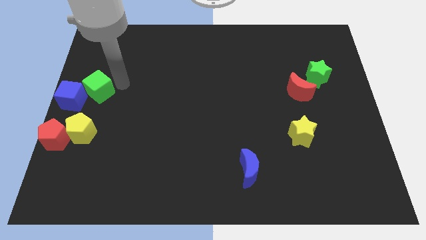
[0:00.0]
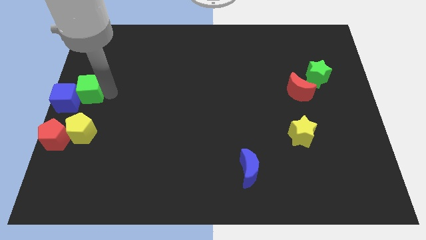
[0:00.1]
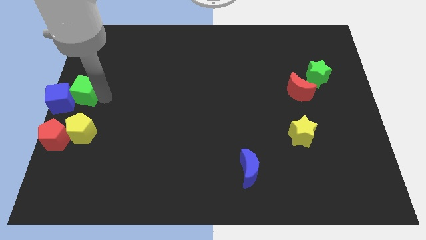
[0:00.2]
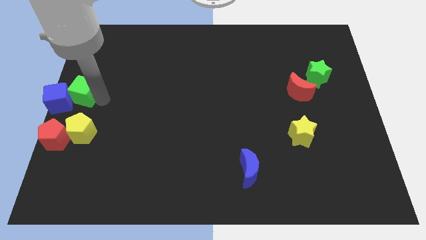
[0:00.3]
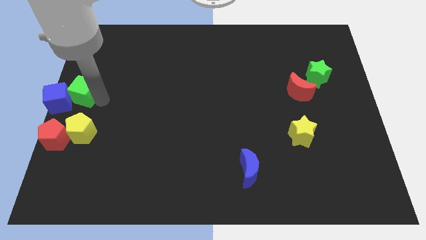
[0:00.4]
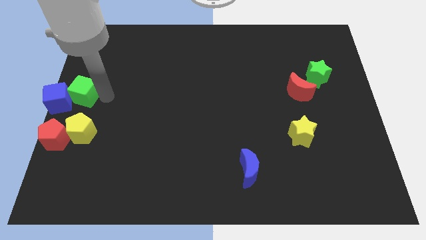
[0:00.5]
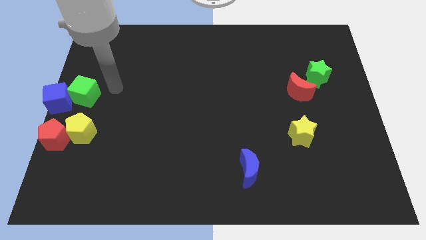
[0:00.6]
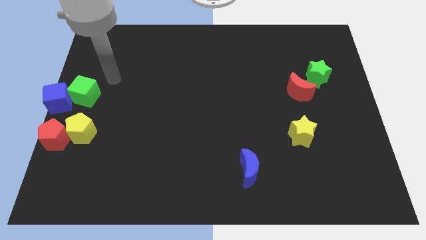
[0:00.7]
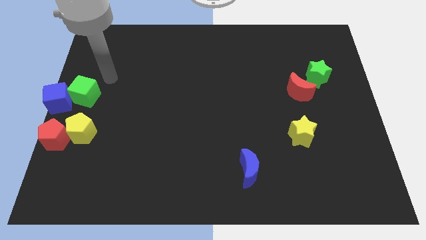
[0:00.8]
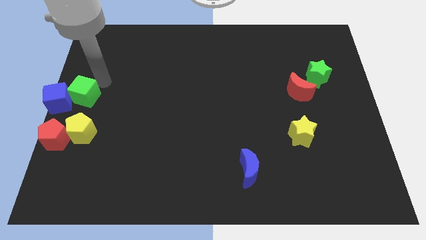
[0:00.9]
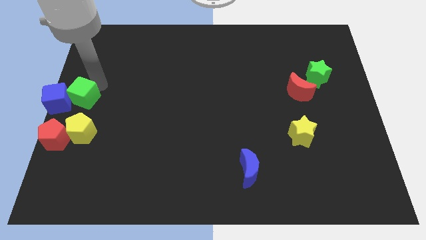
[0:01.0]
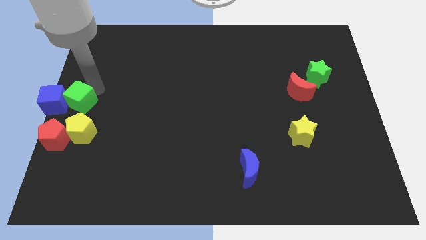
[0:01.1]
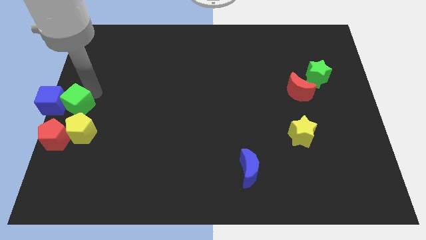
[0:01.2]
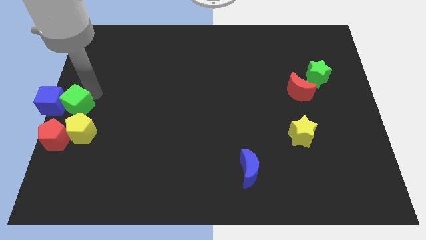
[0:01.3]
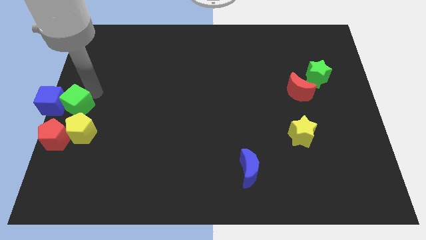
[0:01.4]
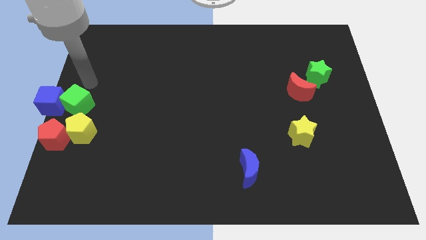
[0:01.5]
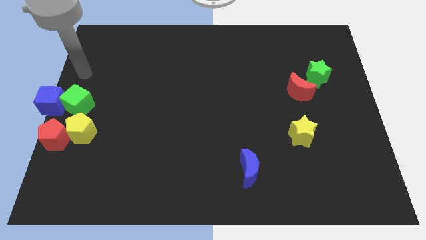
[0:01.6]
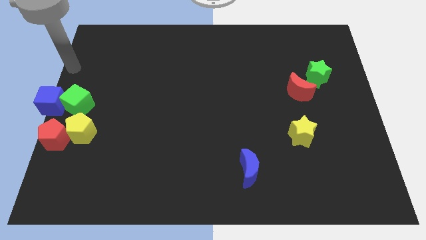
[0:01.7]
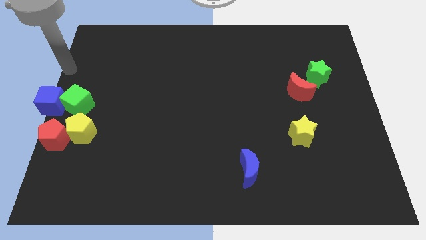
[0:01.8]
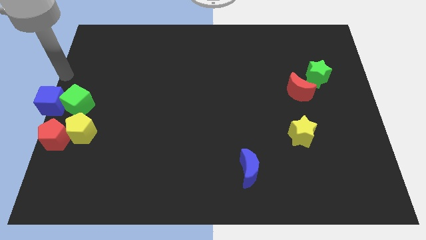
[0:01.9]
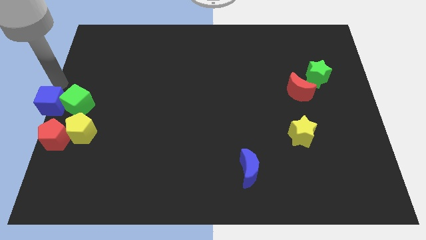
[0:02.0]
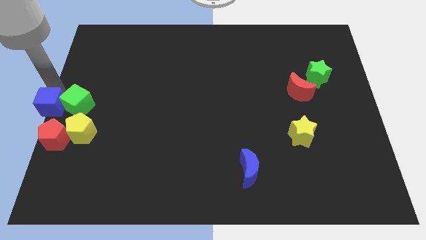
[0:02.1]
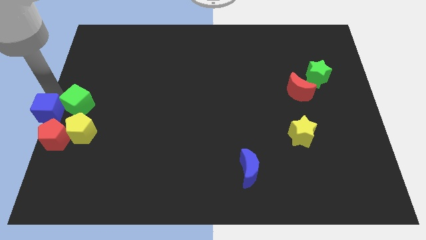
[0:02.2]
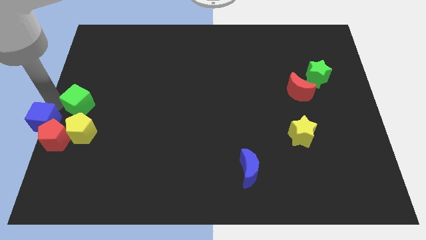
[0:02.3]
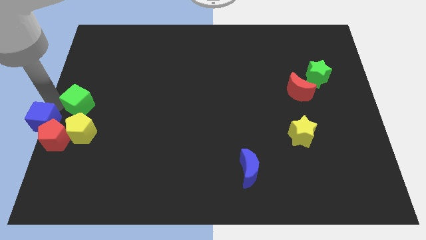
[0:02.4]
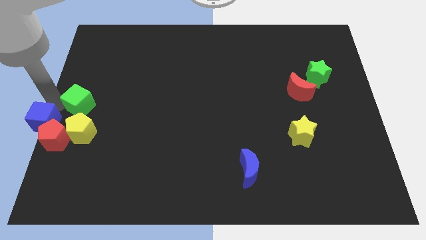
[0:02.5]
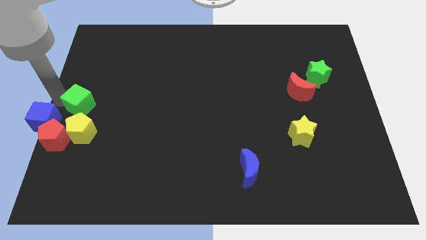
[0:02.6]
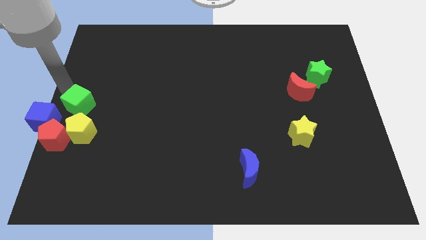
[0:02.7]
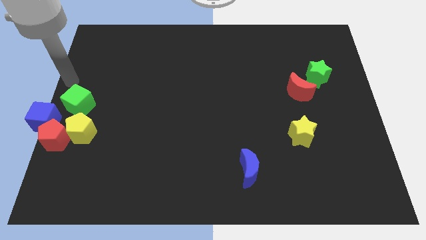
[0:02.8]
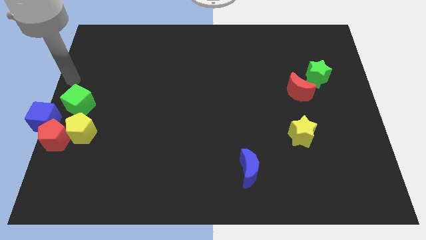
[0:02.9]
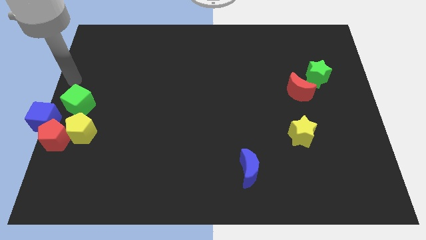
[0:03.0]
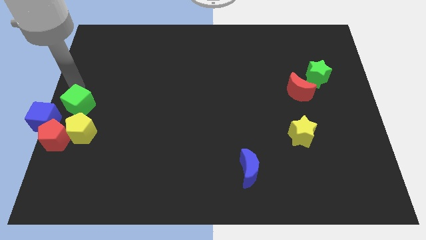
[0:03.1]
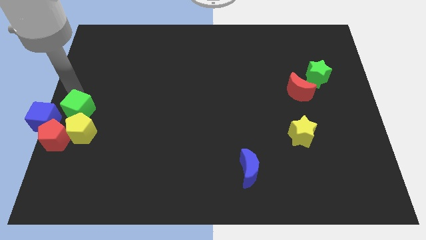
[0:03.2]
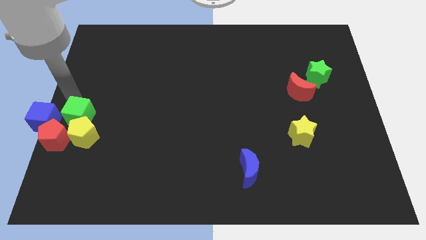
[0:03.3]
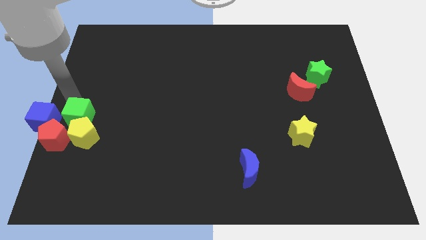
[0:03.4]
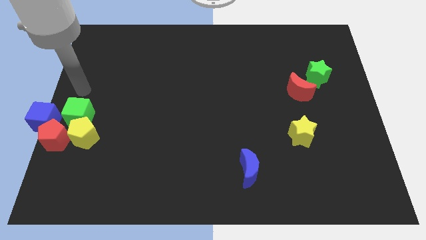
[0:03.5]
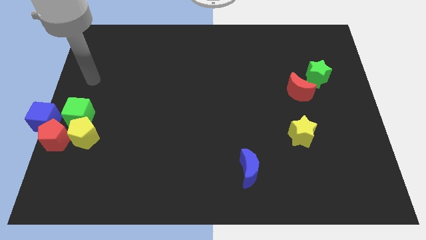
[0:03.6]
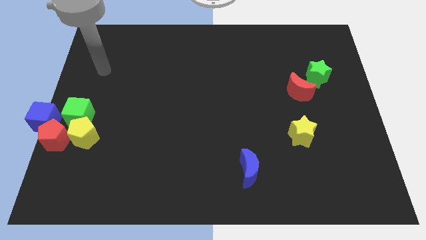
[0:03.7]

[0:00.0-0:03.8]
push the cubes above into the pentagons at the left

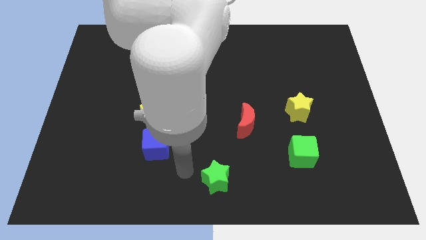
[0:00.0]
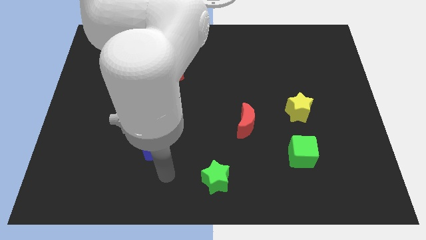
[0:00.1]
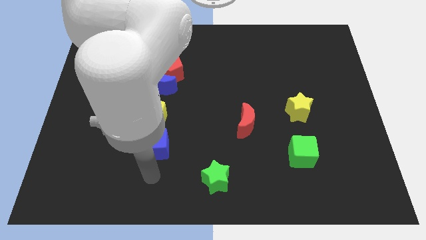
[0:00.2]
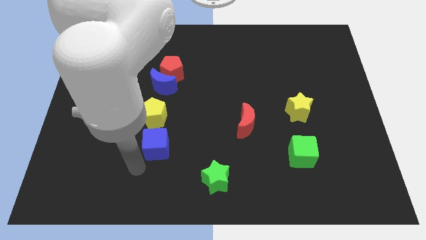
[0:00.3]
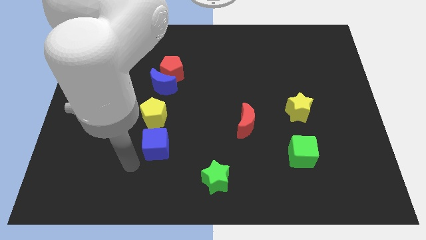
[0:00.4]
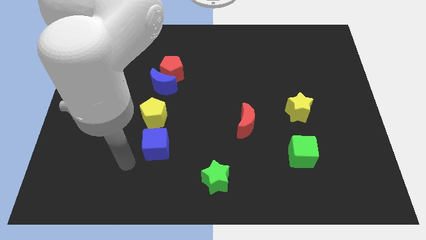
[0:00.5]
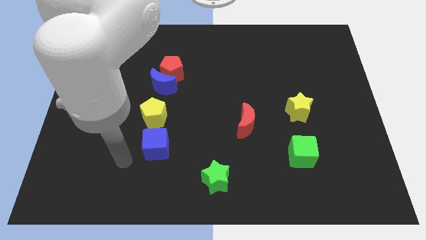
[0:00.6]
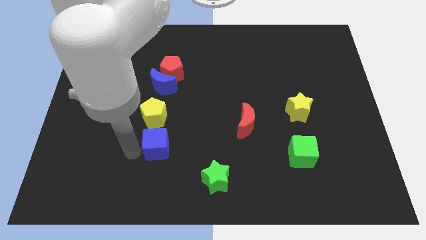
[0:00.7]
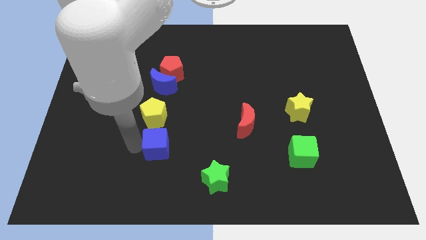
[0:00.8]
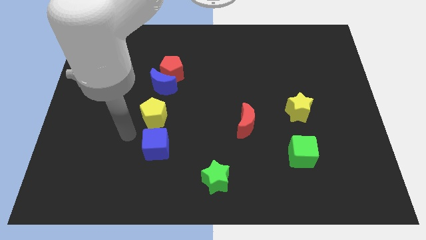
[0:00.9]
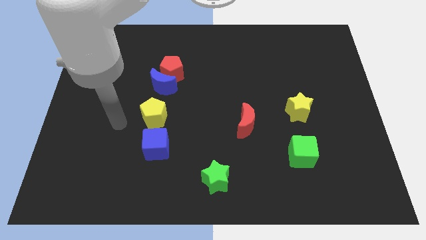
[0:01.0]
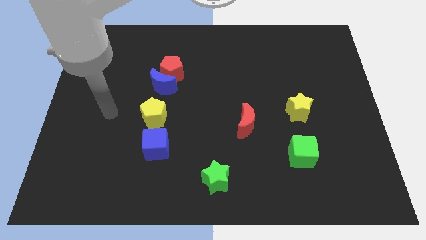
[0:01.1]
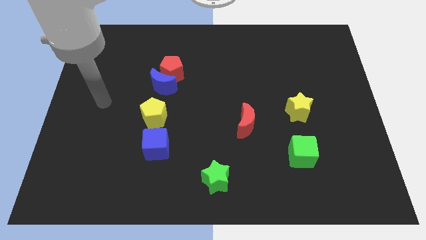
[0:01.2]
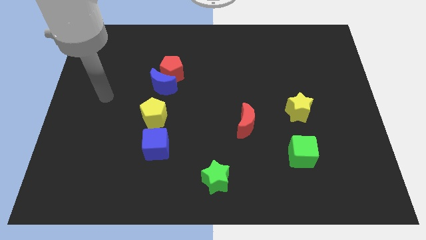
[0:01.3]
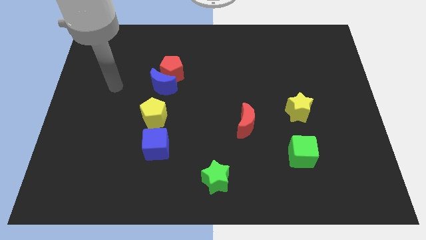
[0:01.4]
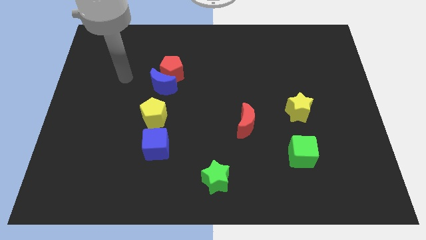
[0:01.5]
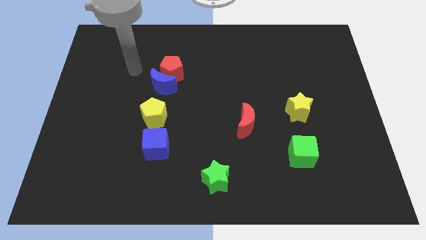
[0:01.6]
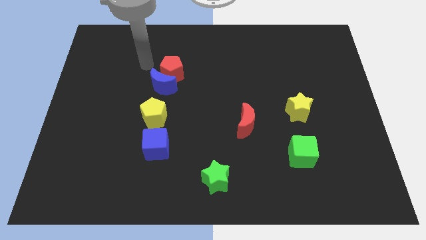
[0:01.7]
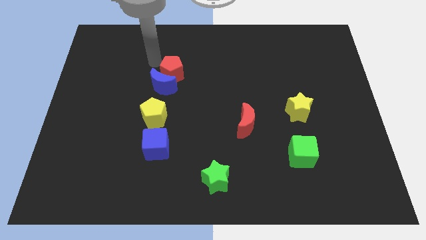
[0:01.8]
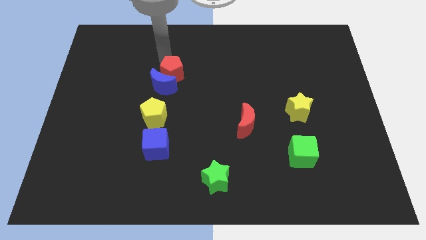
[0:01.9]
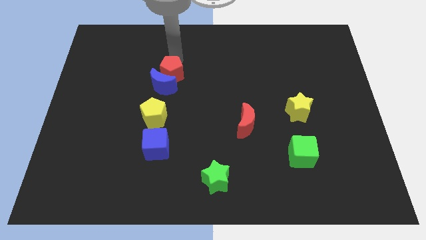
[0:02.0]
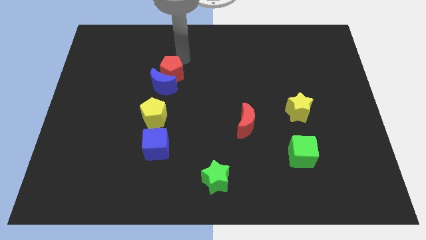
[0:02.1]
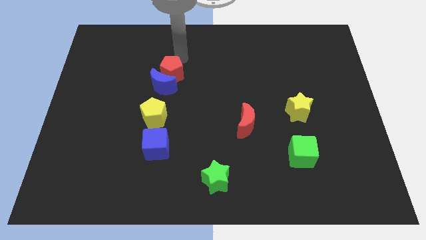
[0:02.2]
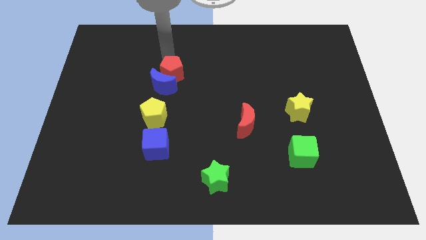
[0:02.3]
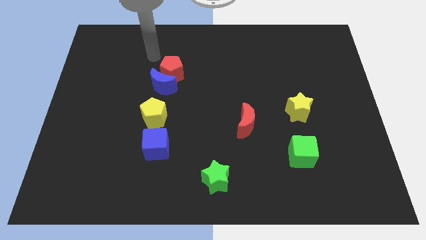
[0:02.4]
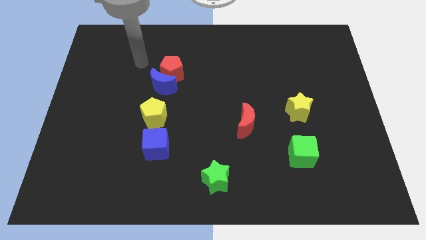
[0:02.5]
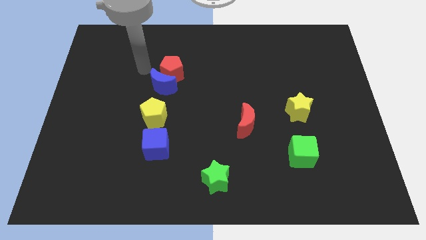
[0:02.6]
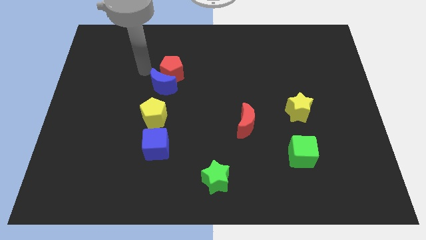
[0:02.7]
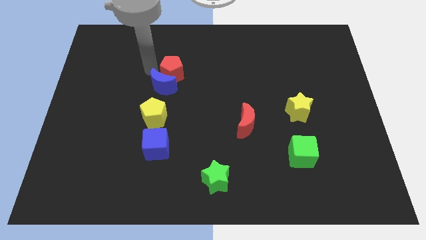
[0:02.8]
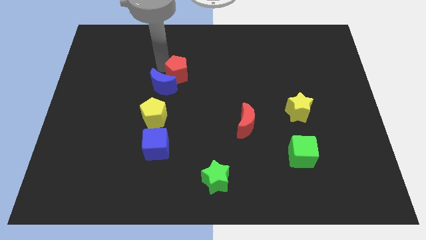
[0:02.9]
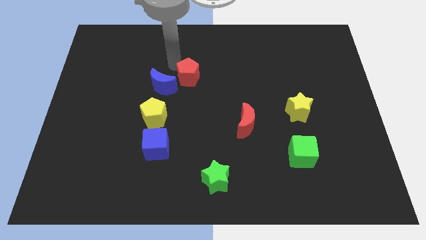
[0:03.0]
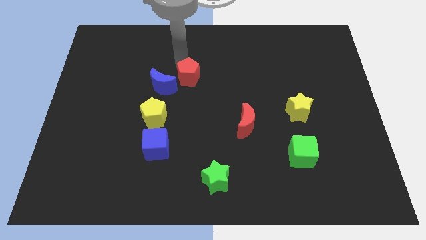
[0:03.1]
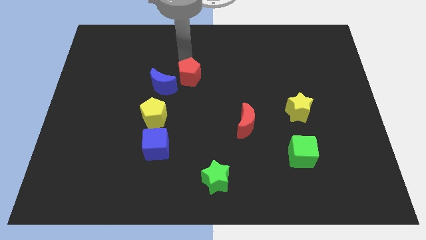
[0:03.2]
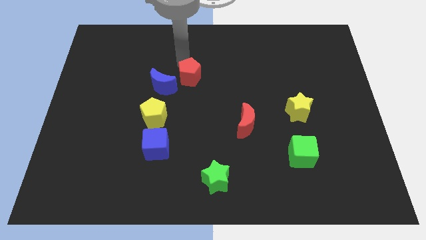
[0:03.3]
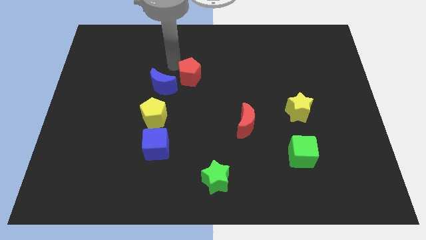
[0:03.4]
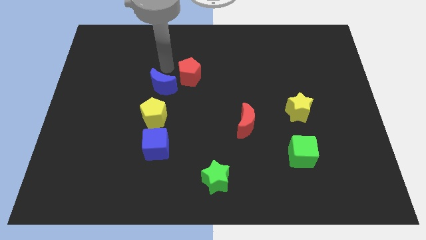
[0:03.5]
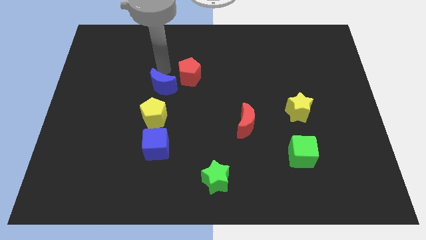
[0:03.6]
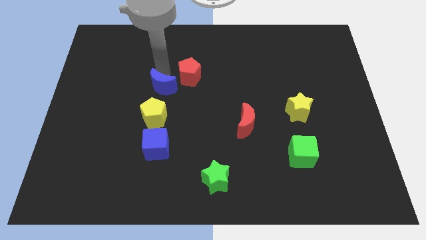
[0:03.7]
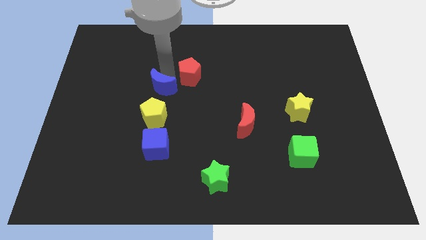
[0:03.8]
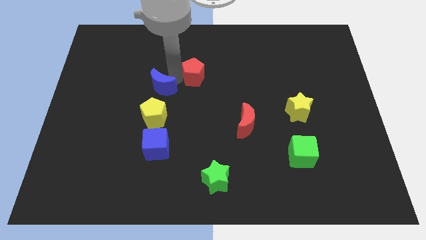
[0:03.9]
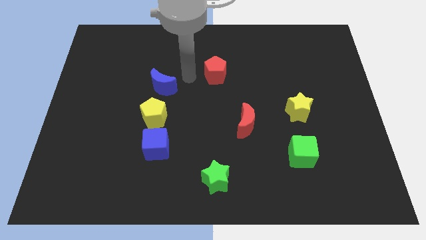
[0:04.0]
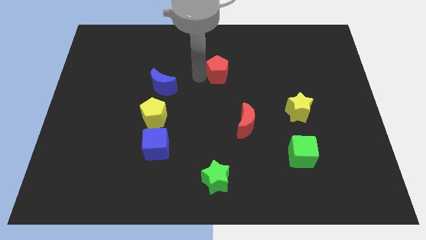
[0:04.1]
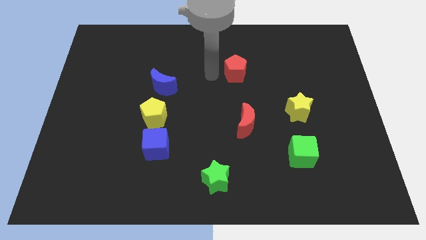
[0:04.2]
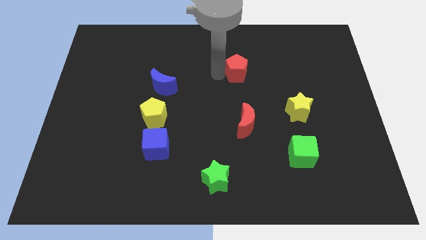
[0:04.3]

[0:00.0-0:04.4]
slightly move the red pentagon to the right side of the board

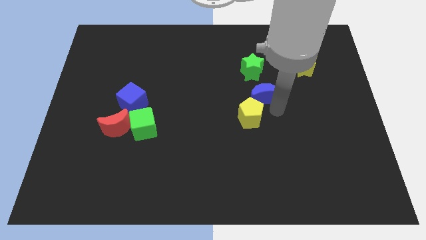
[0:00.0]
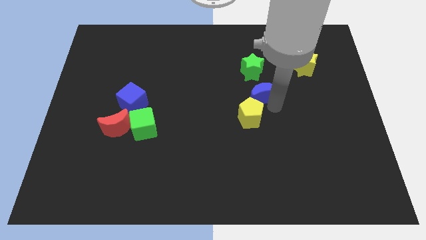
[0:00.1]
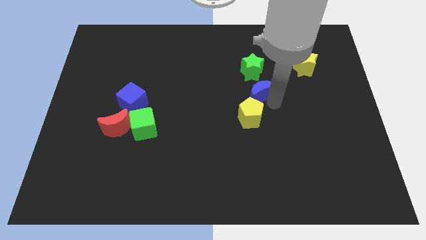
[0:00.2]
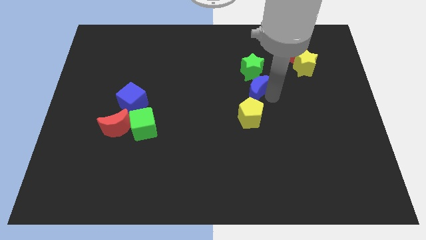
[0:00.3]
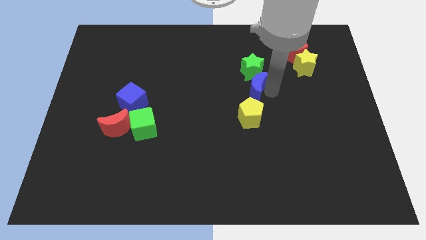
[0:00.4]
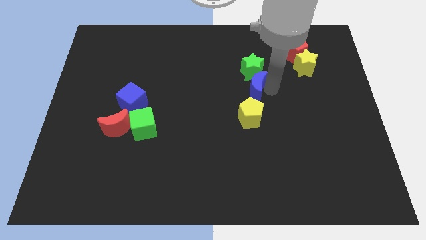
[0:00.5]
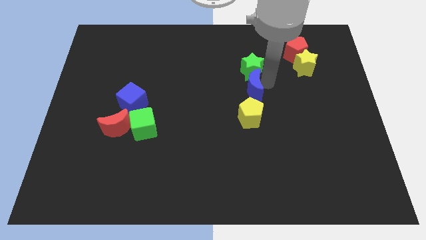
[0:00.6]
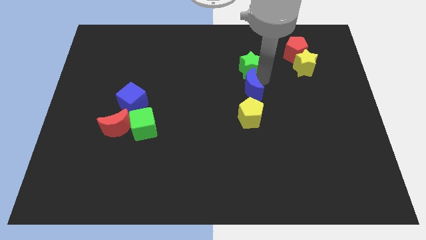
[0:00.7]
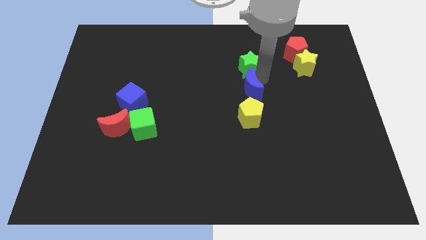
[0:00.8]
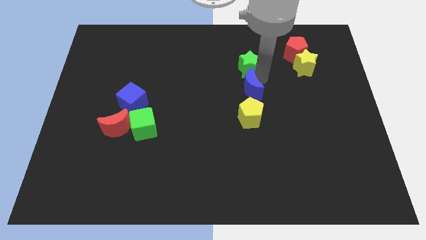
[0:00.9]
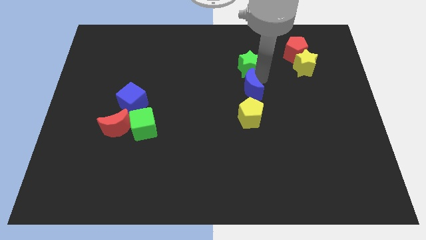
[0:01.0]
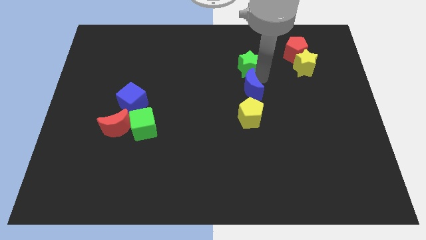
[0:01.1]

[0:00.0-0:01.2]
push the green star with blue crescent slightly
